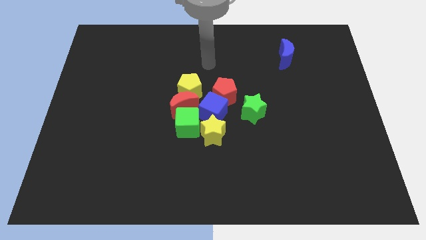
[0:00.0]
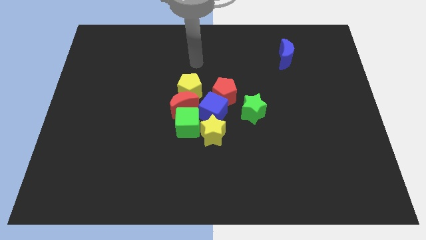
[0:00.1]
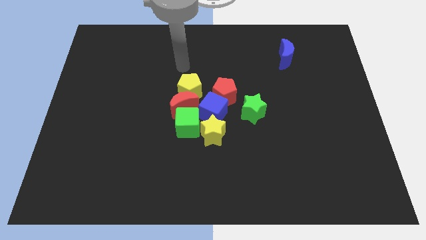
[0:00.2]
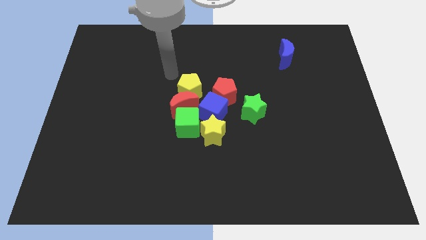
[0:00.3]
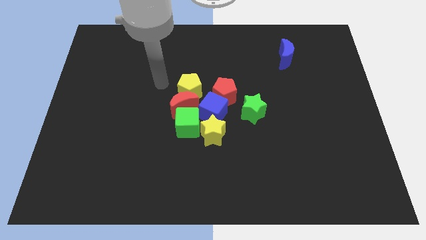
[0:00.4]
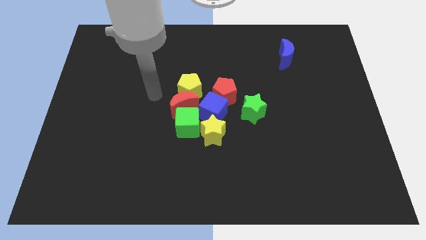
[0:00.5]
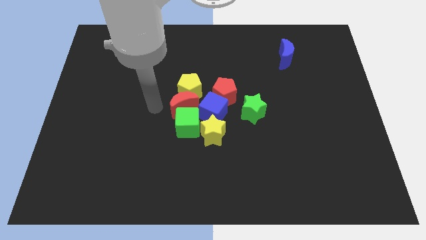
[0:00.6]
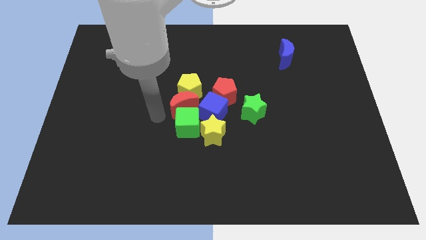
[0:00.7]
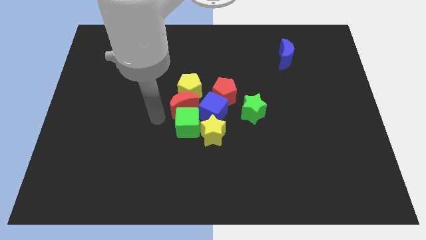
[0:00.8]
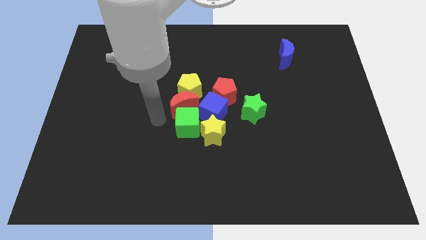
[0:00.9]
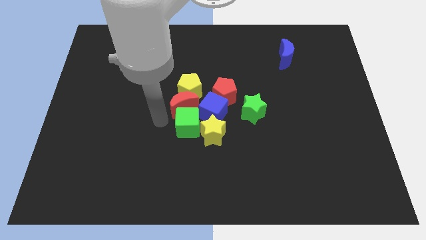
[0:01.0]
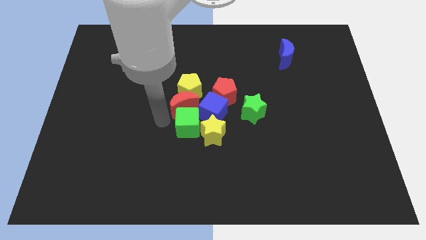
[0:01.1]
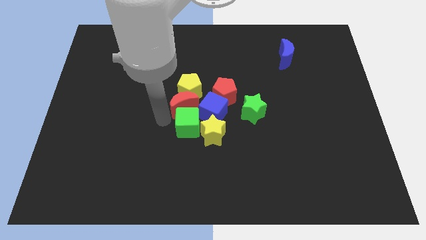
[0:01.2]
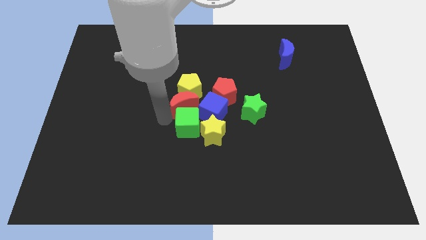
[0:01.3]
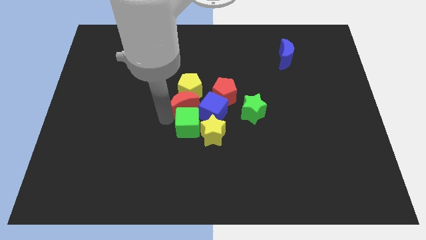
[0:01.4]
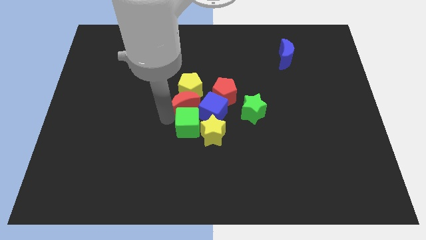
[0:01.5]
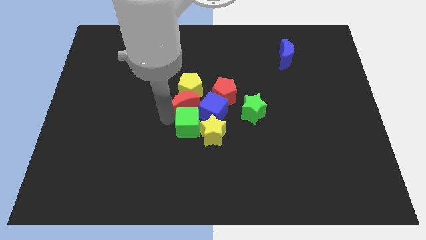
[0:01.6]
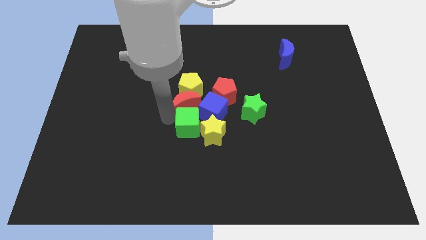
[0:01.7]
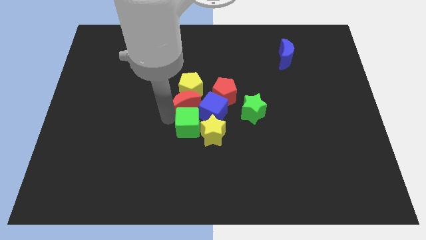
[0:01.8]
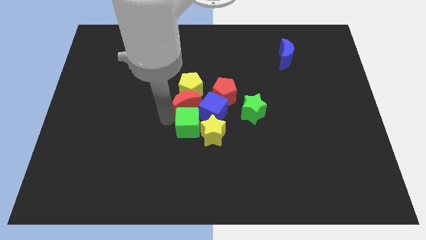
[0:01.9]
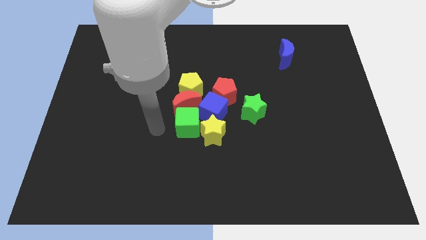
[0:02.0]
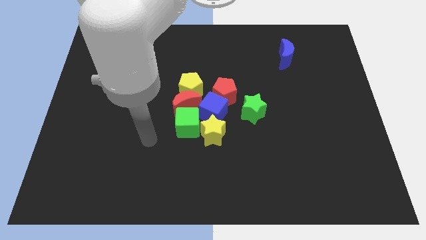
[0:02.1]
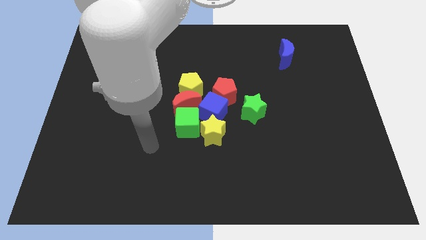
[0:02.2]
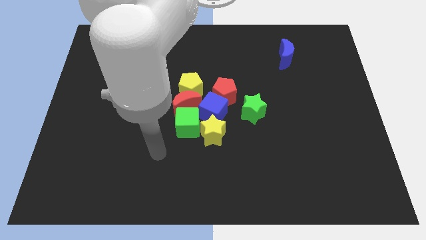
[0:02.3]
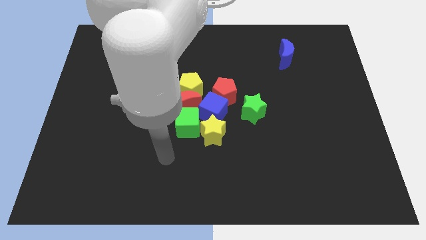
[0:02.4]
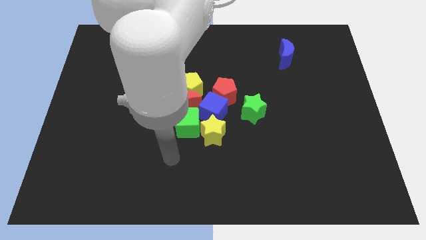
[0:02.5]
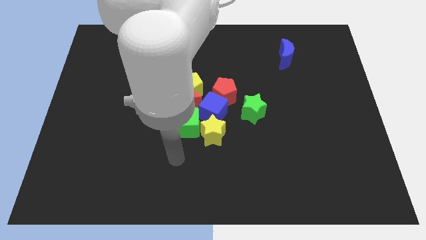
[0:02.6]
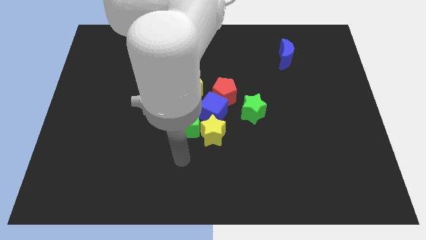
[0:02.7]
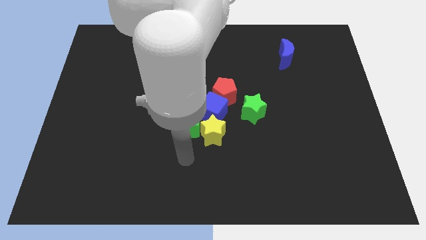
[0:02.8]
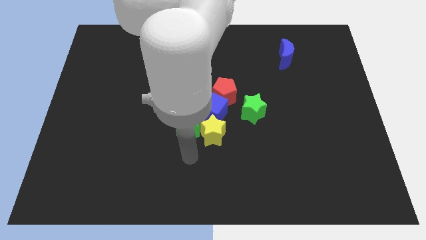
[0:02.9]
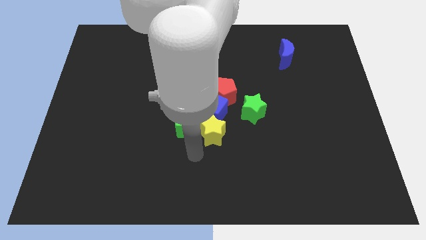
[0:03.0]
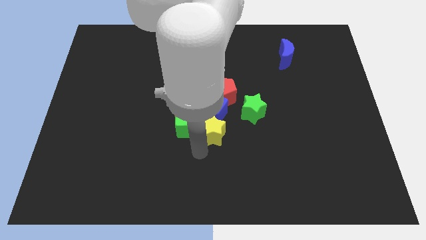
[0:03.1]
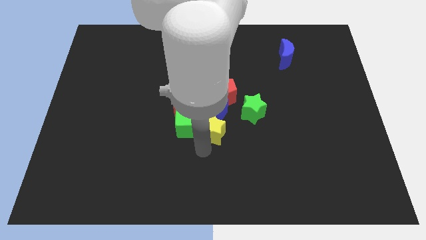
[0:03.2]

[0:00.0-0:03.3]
move the arm to the bottom center of the board

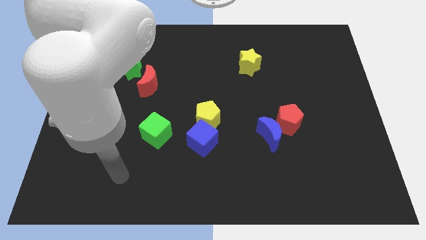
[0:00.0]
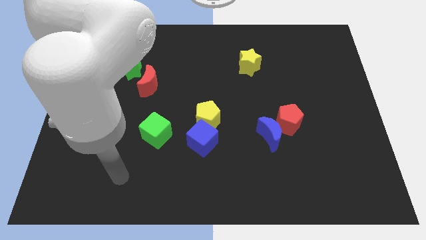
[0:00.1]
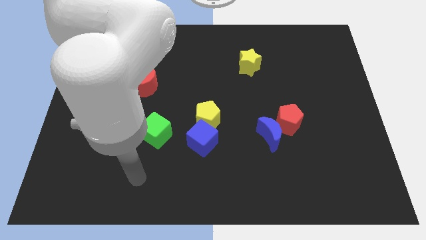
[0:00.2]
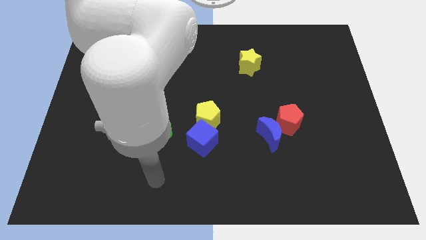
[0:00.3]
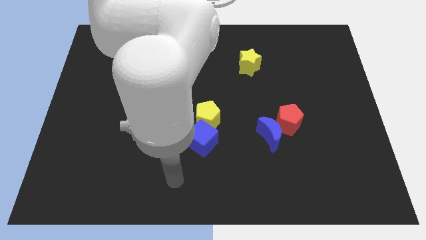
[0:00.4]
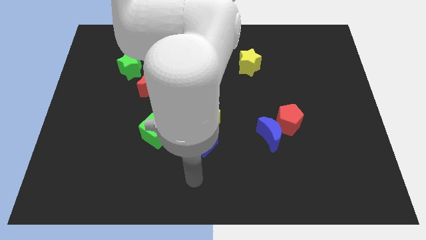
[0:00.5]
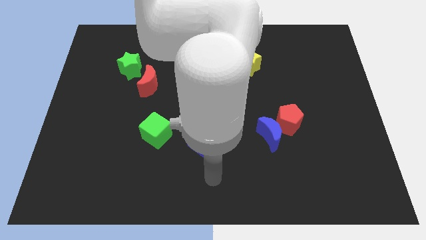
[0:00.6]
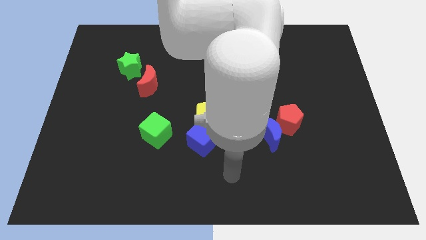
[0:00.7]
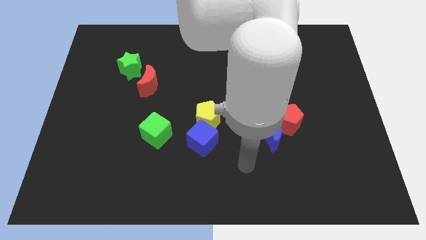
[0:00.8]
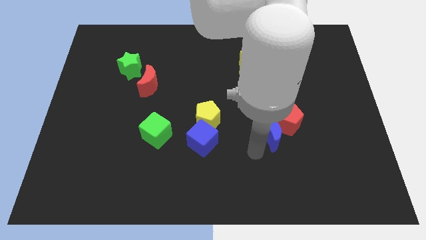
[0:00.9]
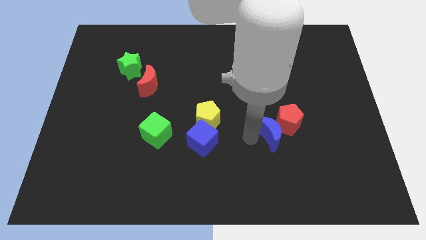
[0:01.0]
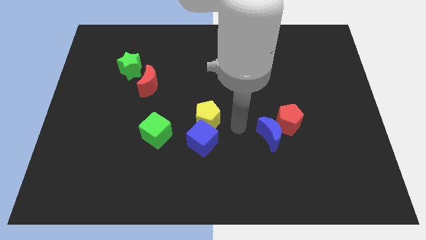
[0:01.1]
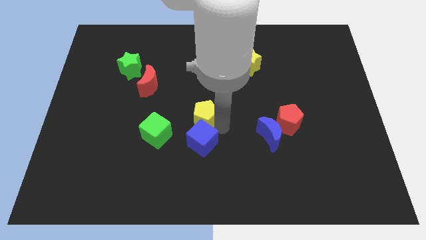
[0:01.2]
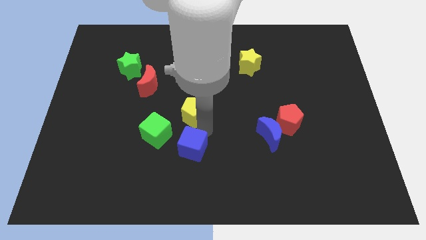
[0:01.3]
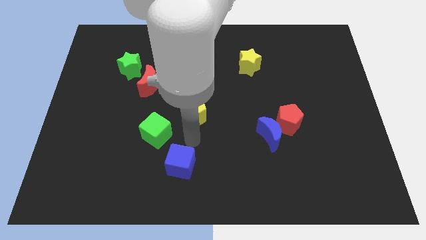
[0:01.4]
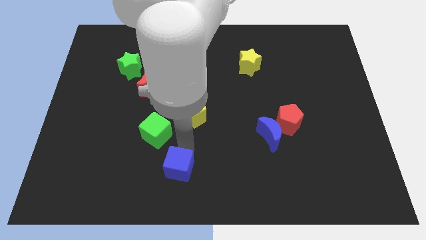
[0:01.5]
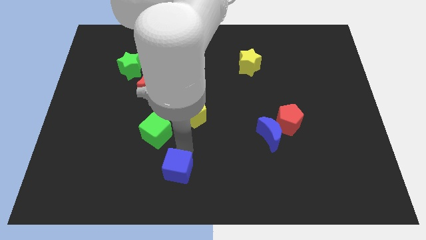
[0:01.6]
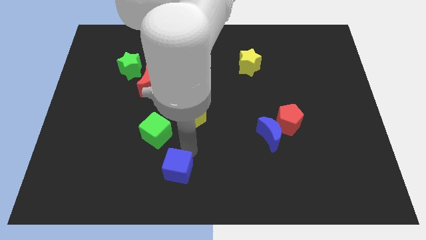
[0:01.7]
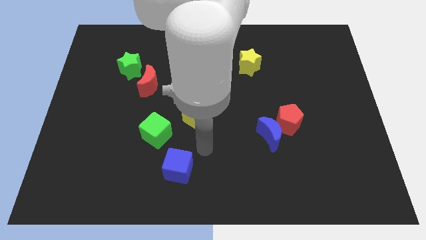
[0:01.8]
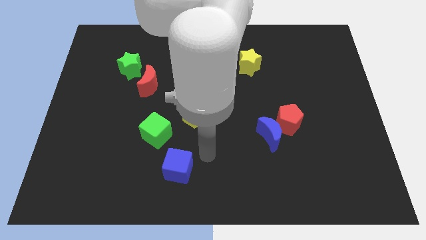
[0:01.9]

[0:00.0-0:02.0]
move the blue cube slightly towards the bottom center

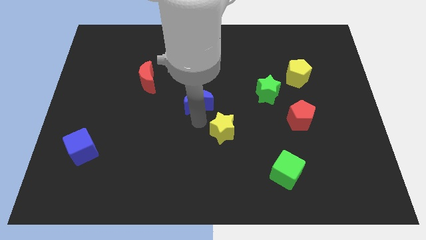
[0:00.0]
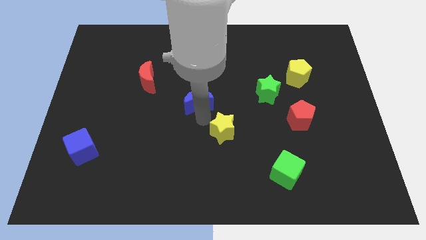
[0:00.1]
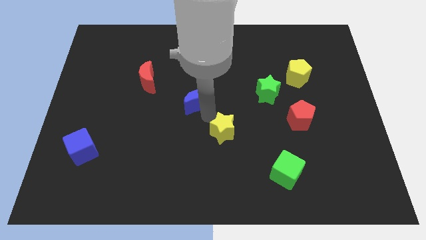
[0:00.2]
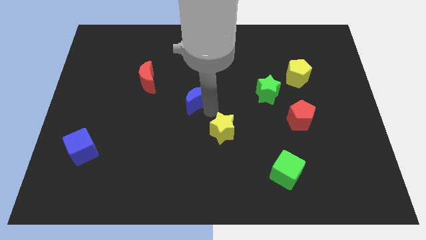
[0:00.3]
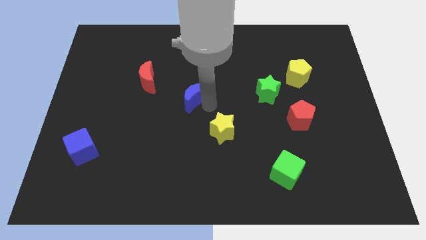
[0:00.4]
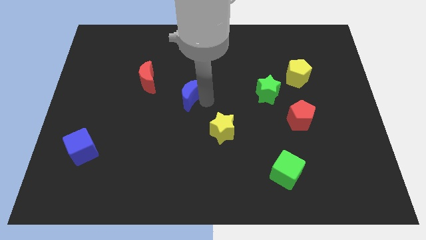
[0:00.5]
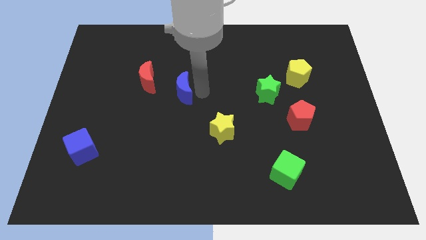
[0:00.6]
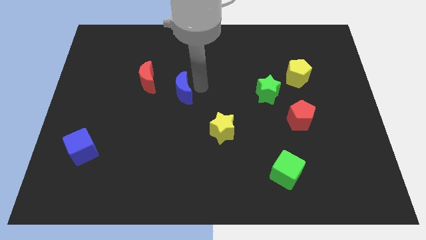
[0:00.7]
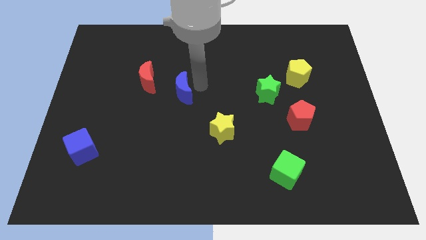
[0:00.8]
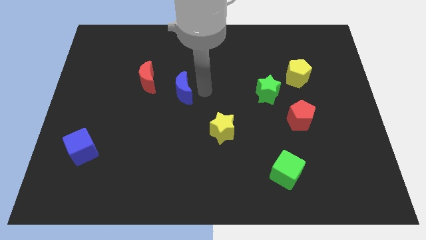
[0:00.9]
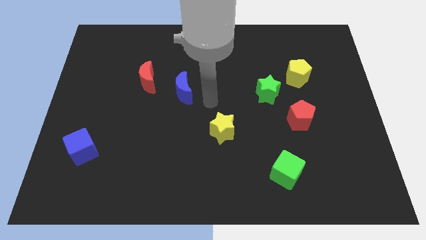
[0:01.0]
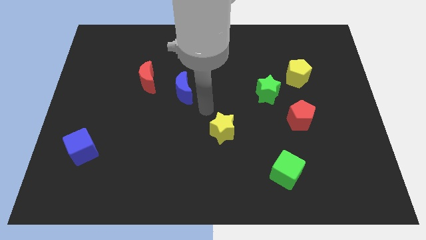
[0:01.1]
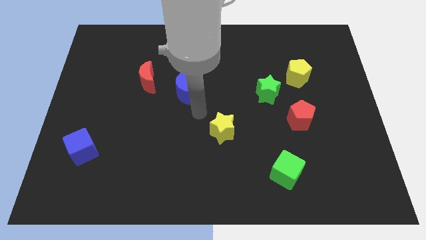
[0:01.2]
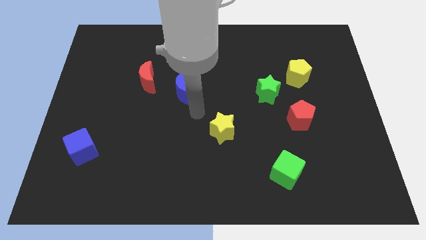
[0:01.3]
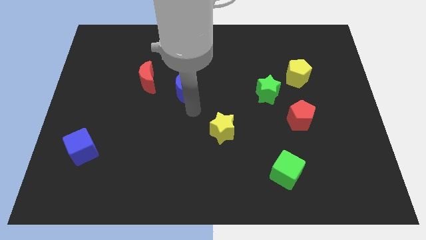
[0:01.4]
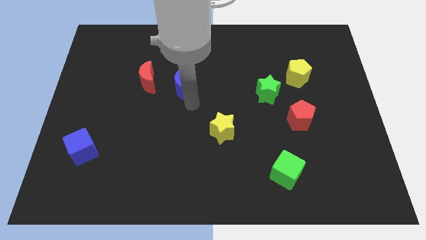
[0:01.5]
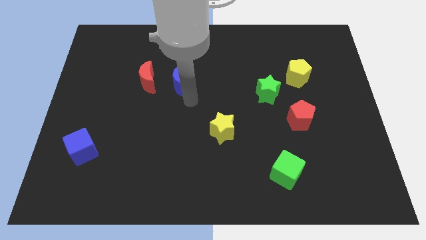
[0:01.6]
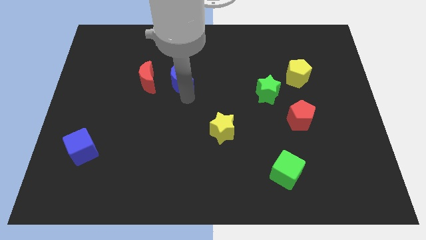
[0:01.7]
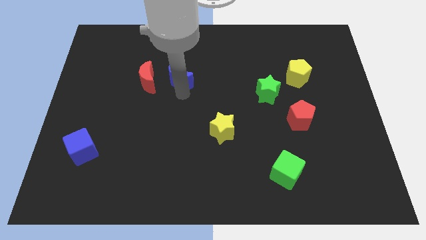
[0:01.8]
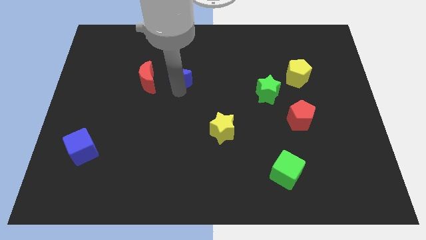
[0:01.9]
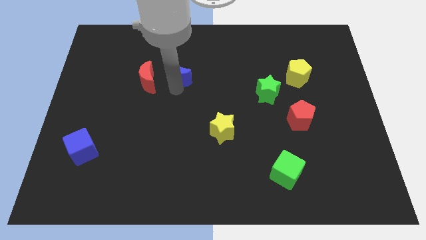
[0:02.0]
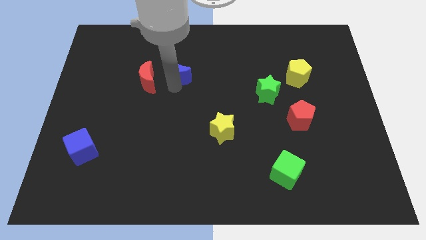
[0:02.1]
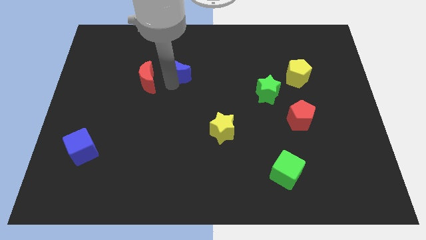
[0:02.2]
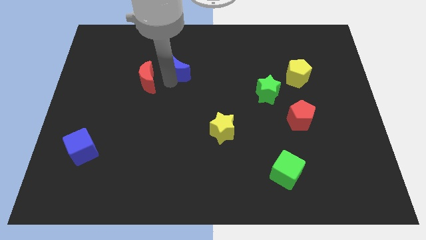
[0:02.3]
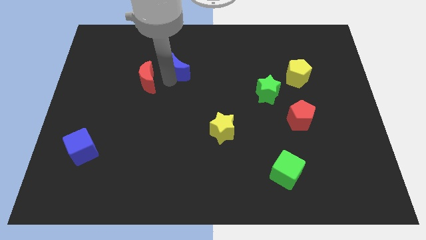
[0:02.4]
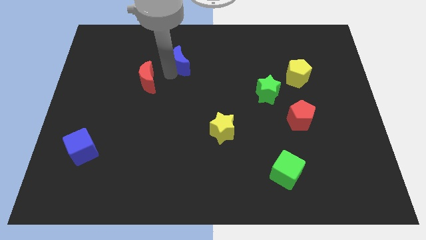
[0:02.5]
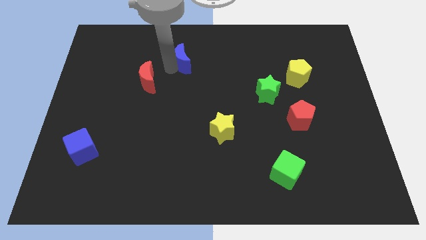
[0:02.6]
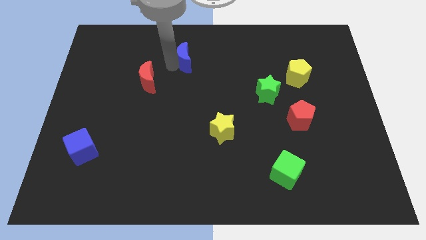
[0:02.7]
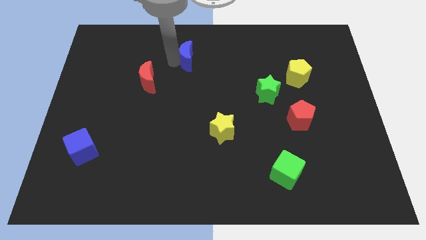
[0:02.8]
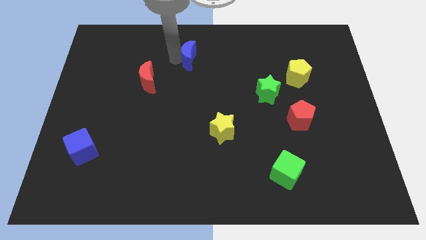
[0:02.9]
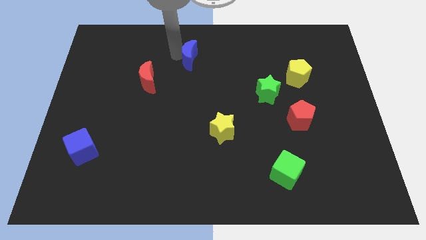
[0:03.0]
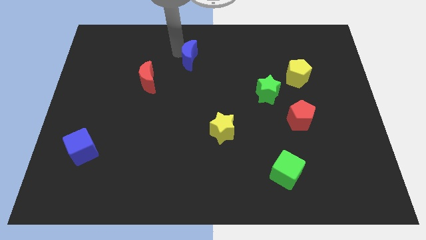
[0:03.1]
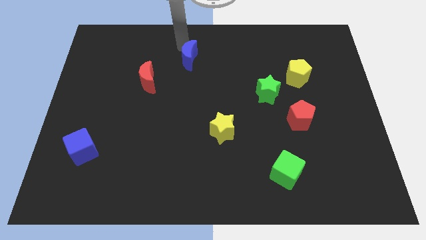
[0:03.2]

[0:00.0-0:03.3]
move the blue moon to the top center

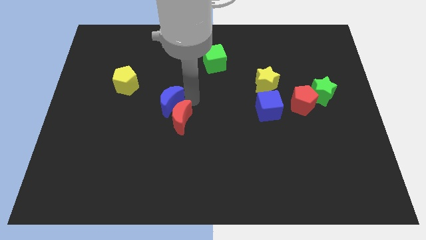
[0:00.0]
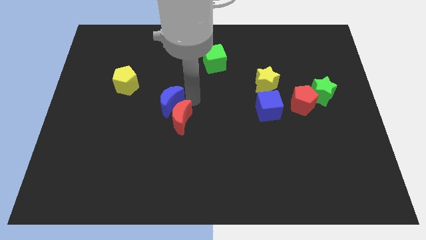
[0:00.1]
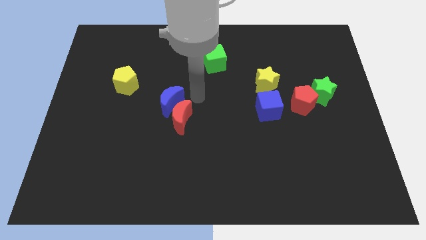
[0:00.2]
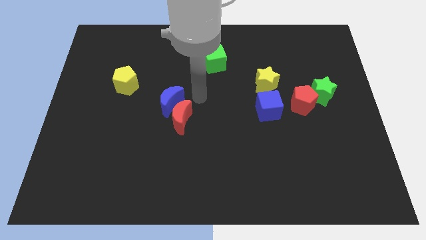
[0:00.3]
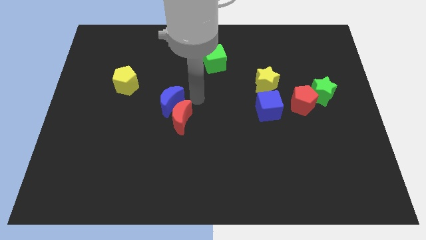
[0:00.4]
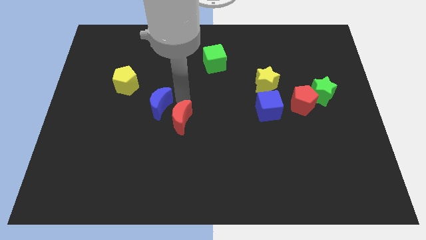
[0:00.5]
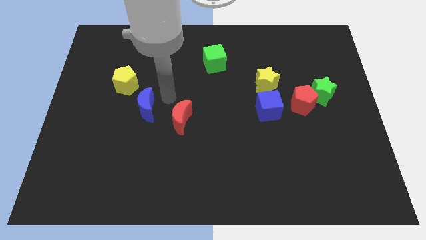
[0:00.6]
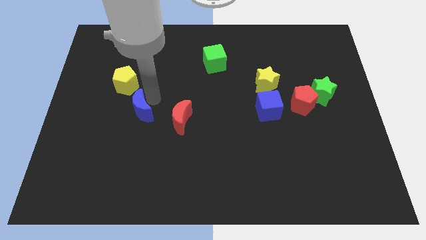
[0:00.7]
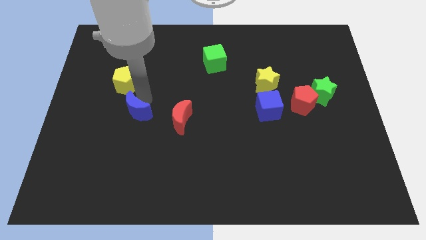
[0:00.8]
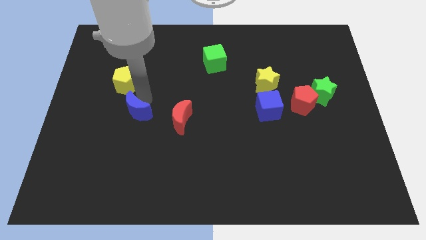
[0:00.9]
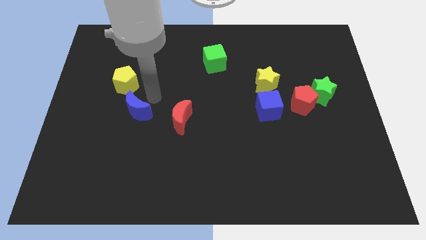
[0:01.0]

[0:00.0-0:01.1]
push the blue crescent to the bottom of yellow pentagon
